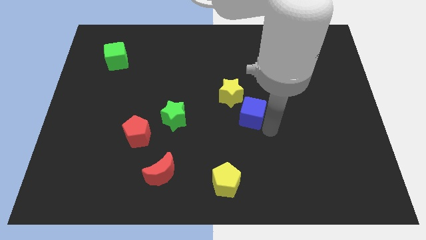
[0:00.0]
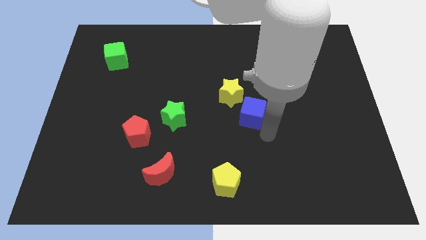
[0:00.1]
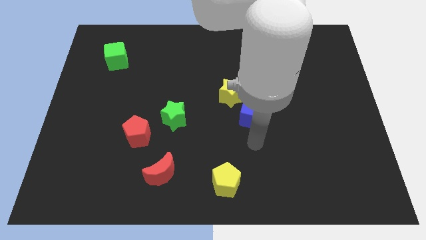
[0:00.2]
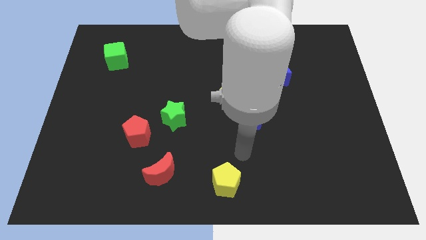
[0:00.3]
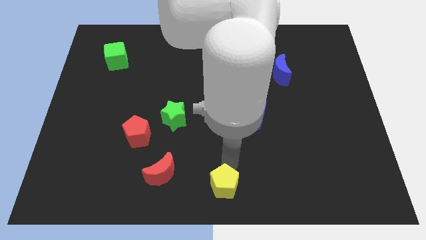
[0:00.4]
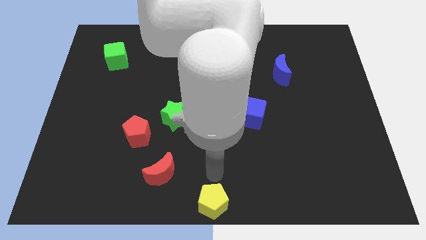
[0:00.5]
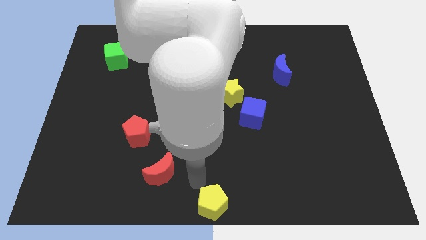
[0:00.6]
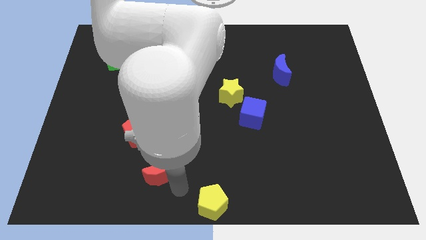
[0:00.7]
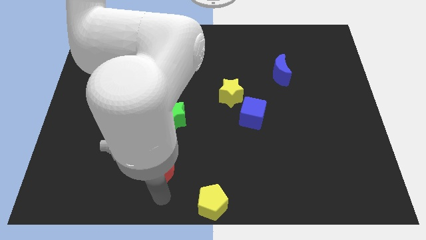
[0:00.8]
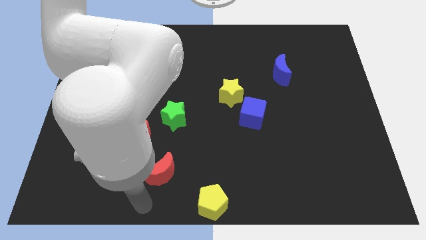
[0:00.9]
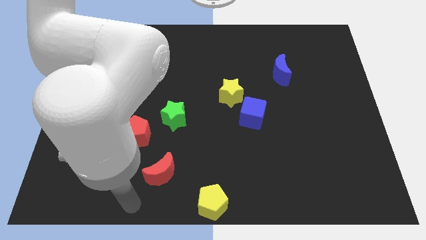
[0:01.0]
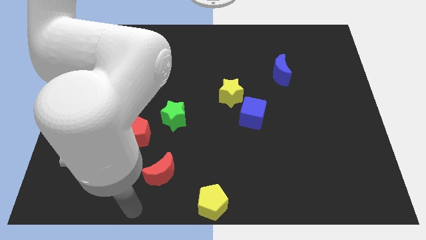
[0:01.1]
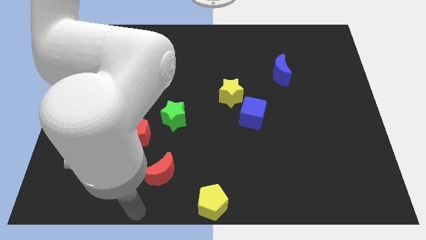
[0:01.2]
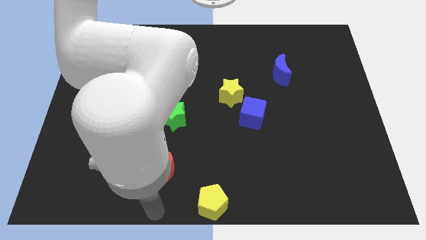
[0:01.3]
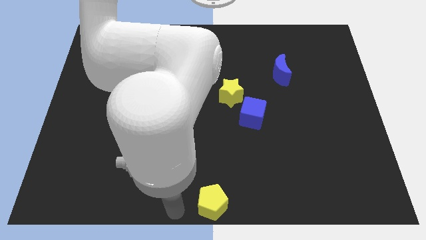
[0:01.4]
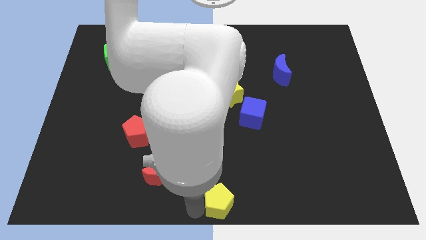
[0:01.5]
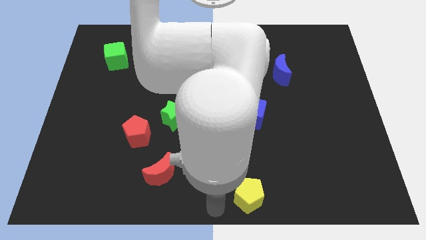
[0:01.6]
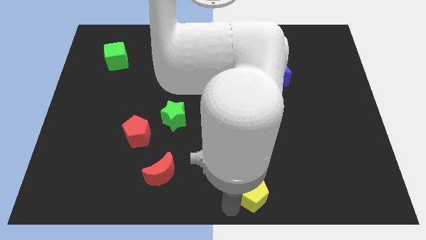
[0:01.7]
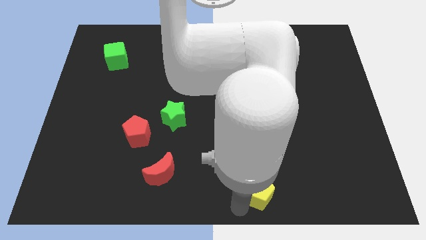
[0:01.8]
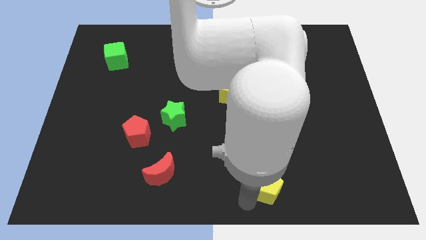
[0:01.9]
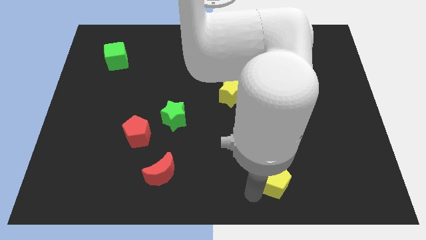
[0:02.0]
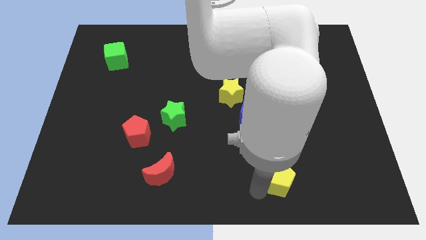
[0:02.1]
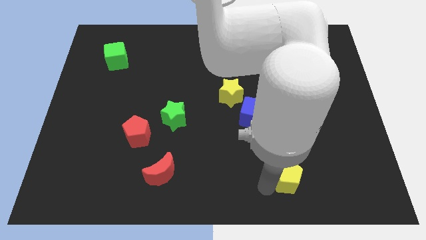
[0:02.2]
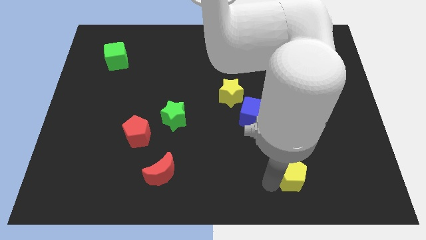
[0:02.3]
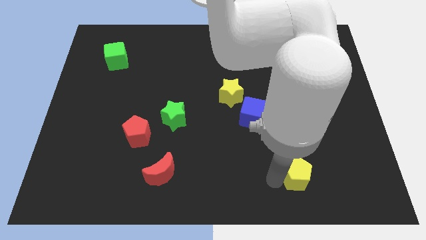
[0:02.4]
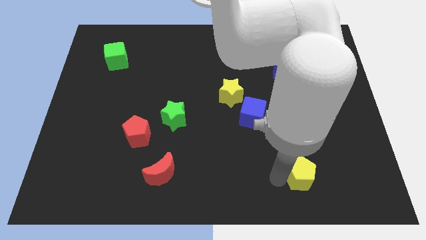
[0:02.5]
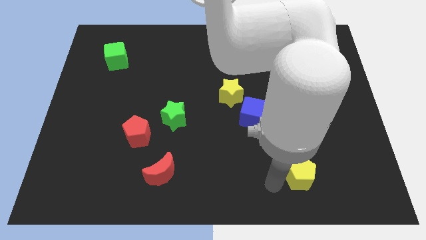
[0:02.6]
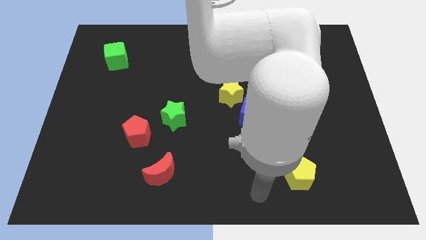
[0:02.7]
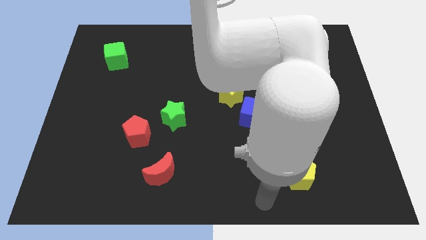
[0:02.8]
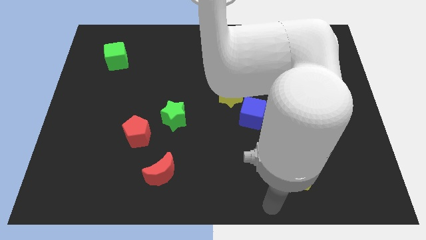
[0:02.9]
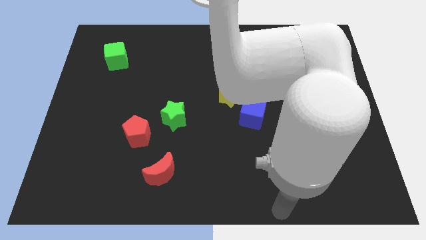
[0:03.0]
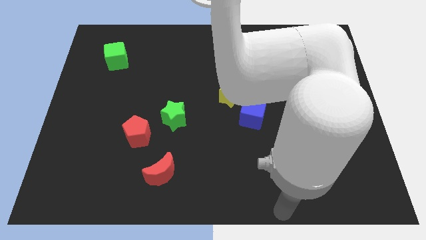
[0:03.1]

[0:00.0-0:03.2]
push the yellow pentagon towards the right side of the board

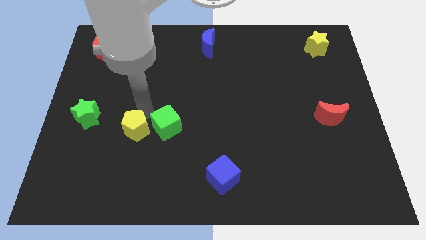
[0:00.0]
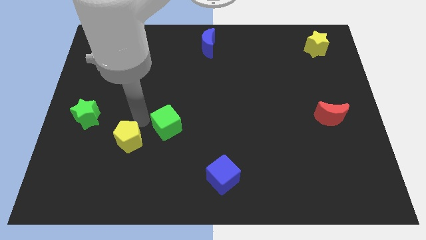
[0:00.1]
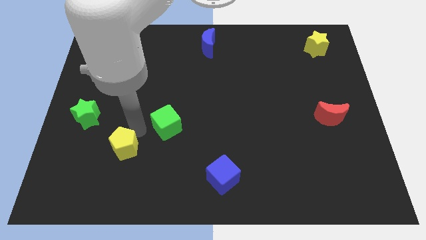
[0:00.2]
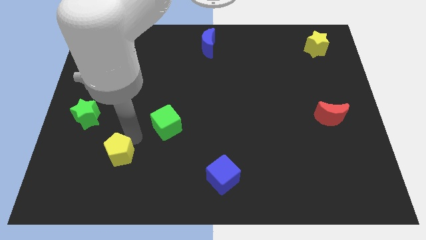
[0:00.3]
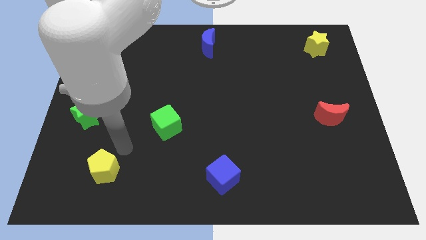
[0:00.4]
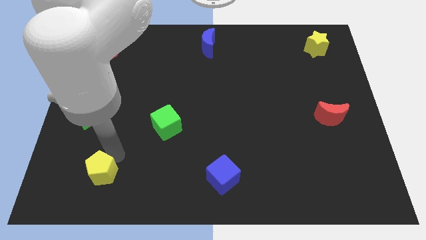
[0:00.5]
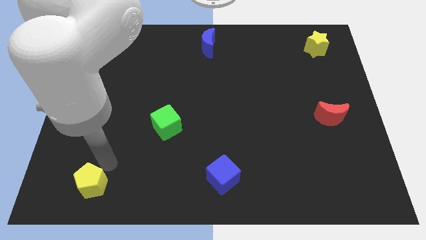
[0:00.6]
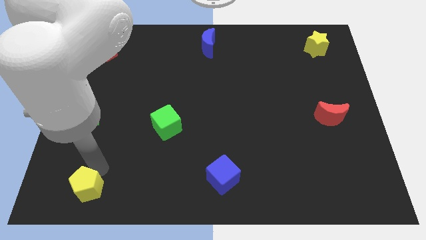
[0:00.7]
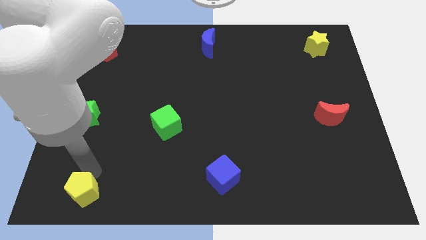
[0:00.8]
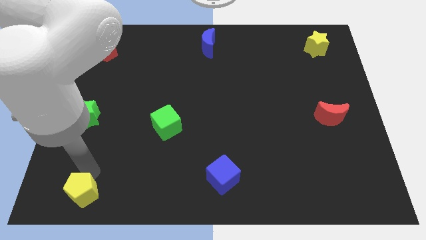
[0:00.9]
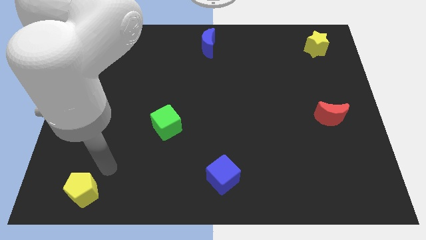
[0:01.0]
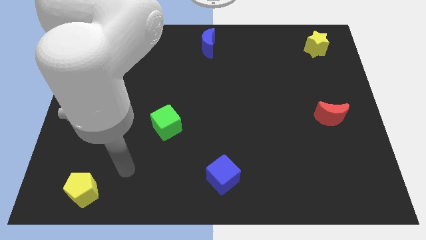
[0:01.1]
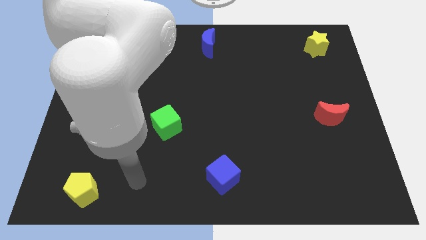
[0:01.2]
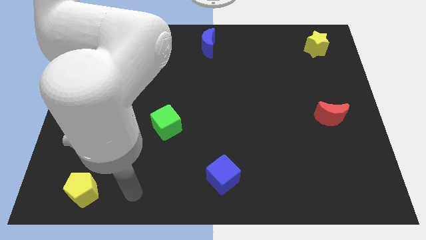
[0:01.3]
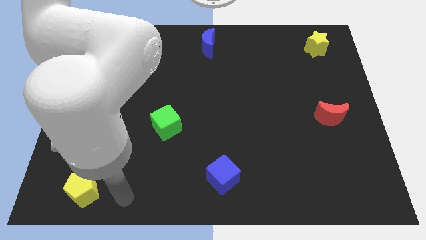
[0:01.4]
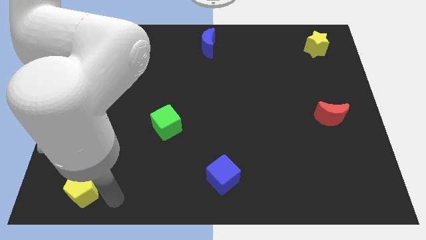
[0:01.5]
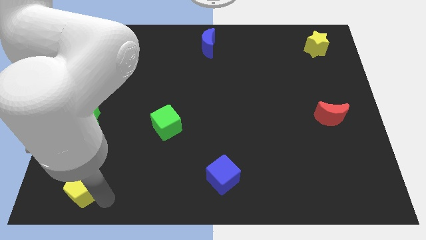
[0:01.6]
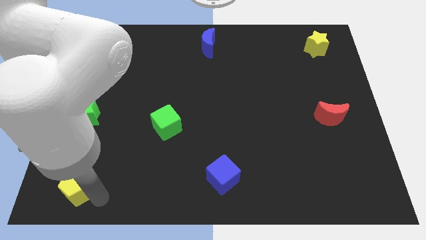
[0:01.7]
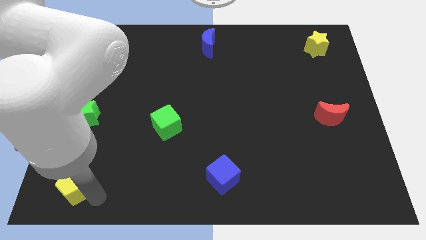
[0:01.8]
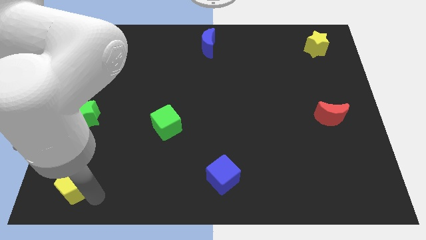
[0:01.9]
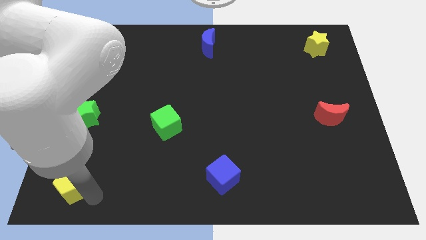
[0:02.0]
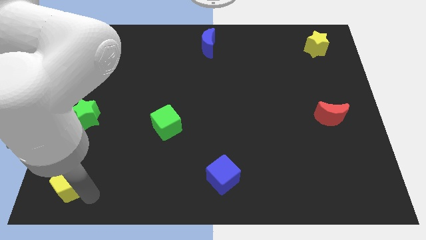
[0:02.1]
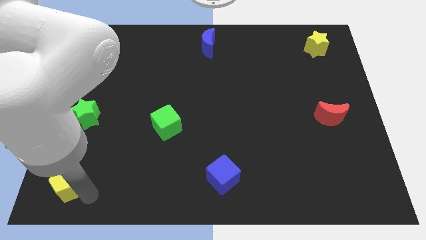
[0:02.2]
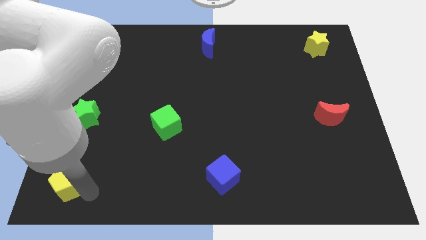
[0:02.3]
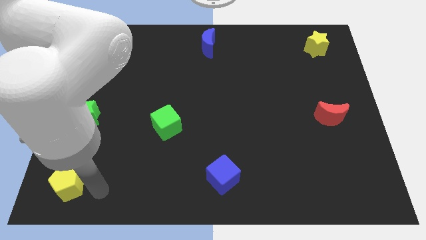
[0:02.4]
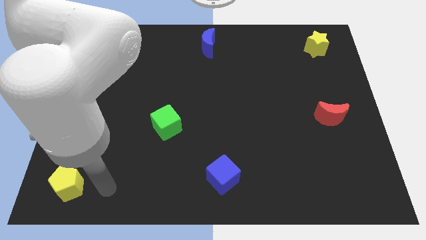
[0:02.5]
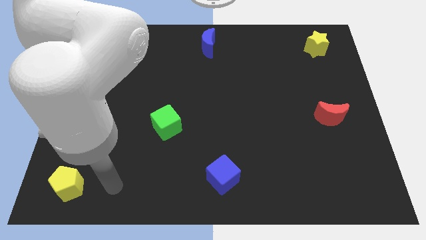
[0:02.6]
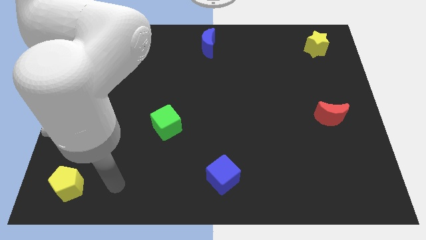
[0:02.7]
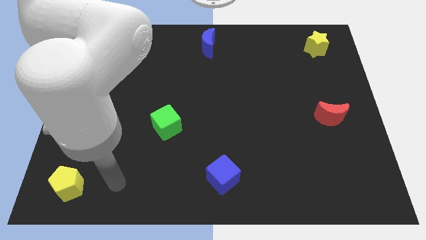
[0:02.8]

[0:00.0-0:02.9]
drag the yellow pentagon to the bottom left

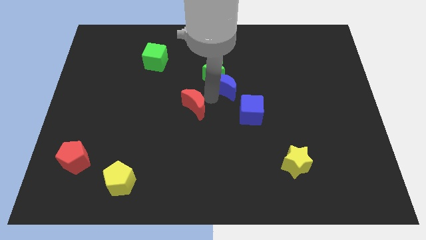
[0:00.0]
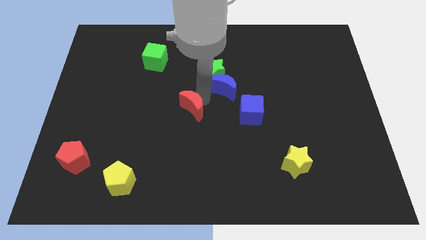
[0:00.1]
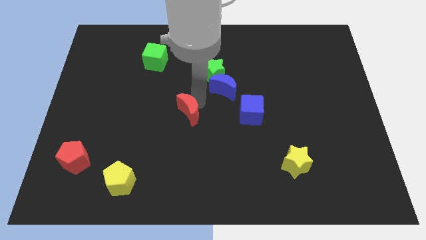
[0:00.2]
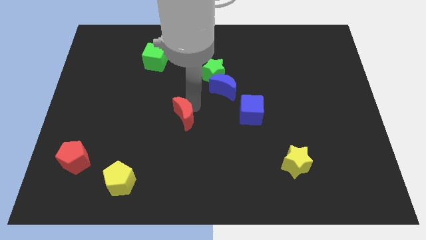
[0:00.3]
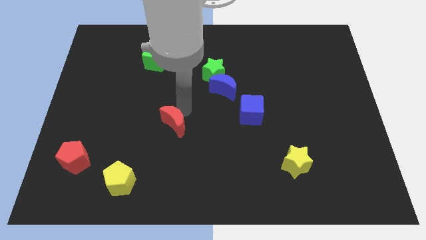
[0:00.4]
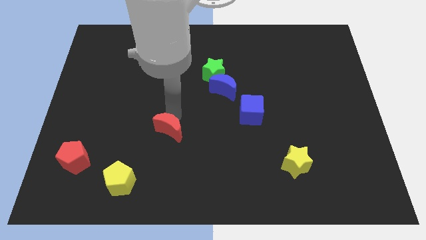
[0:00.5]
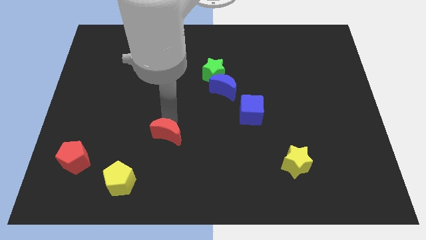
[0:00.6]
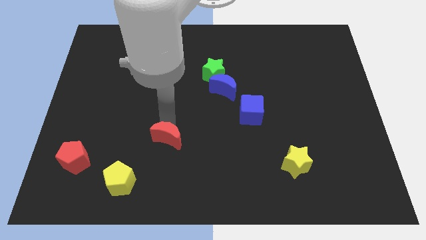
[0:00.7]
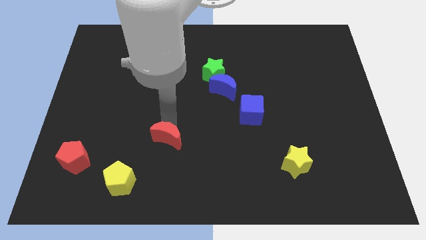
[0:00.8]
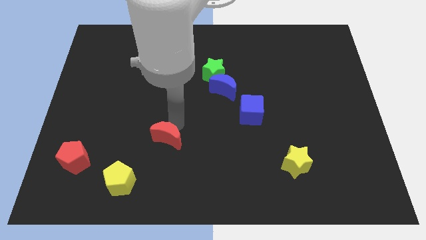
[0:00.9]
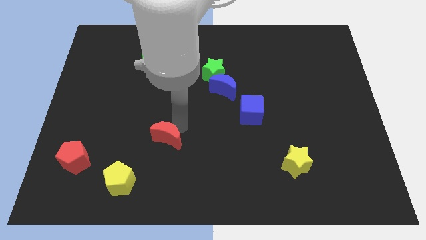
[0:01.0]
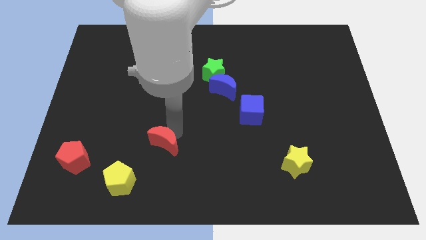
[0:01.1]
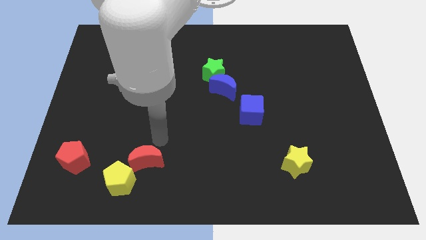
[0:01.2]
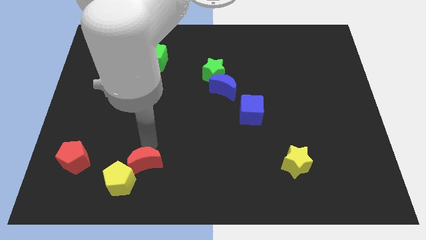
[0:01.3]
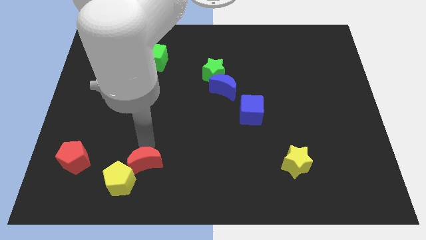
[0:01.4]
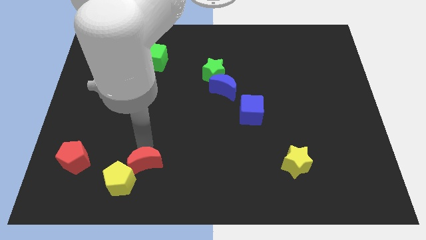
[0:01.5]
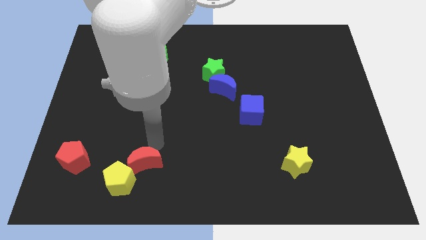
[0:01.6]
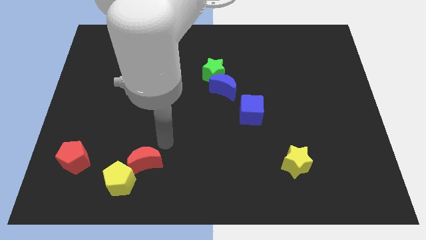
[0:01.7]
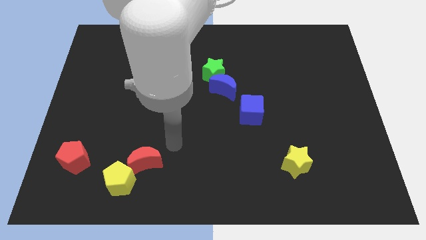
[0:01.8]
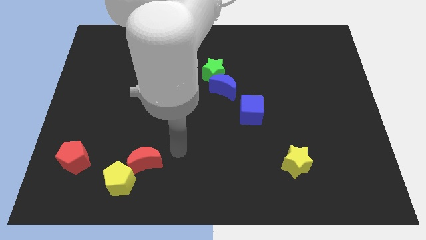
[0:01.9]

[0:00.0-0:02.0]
move the red crescent towards the yellow pentagon

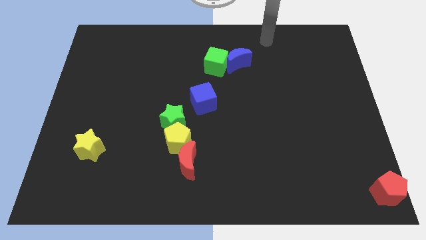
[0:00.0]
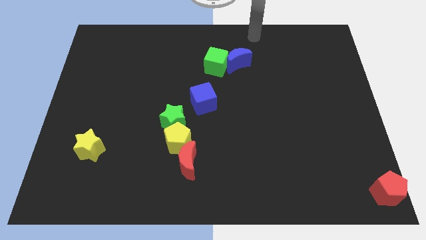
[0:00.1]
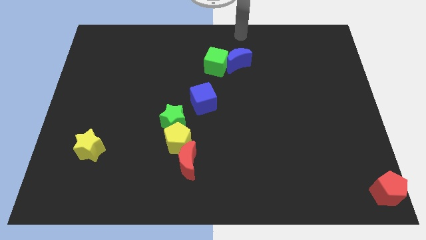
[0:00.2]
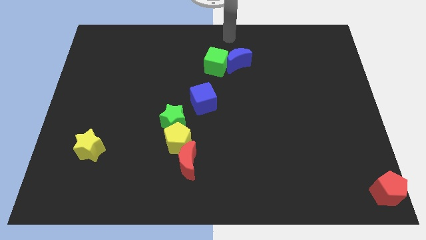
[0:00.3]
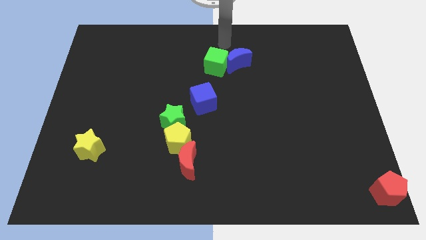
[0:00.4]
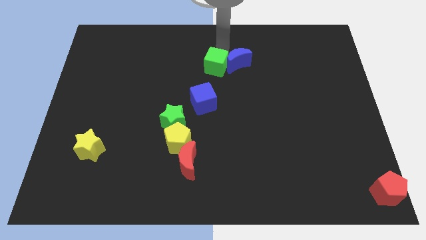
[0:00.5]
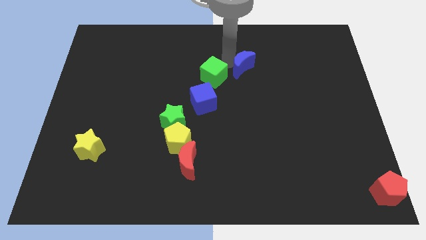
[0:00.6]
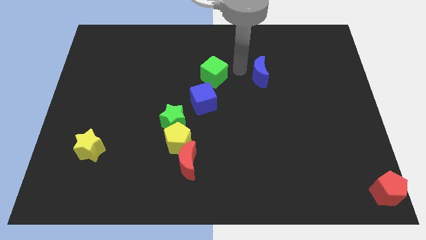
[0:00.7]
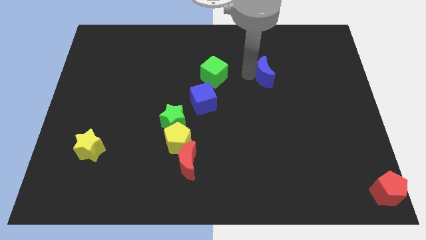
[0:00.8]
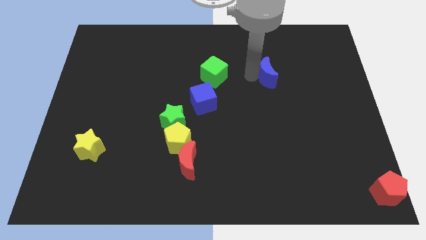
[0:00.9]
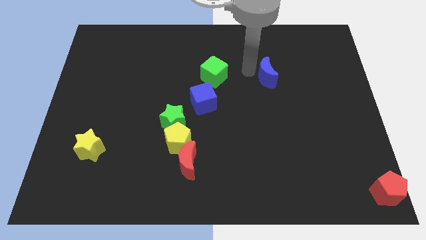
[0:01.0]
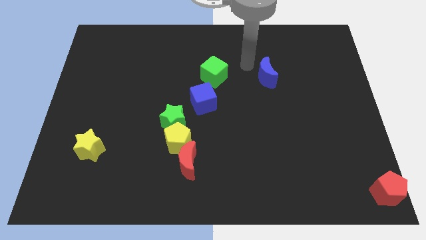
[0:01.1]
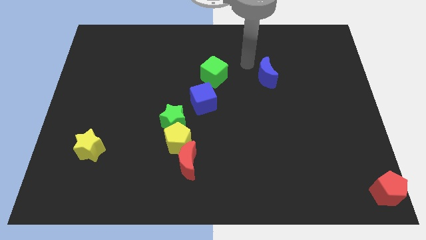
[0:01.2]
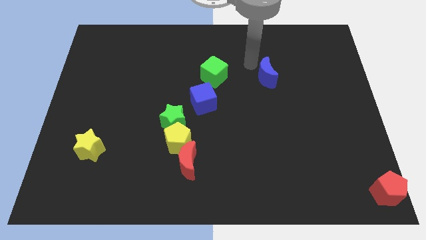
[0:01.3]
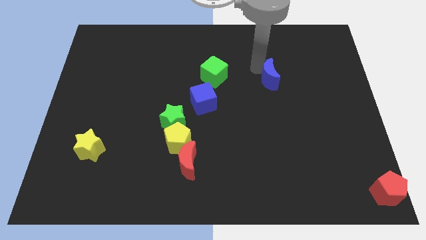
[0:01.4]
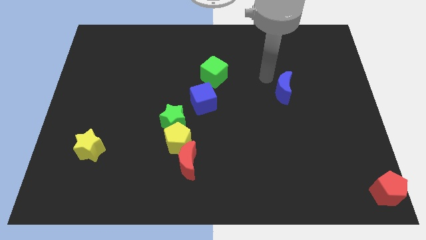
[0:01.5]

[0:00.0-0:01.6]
separate the blue moon from the green cube
